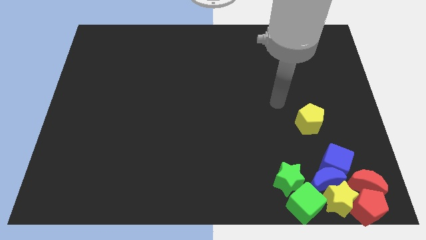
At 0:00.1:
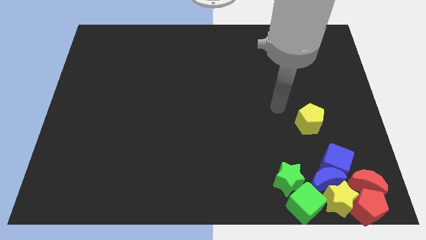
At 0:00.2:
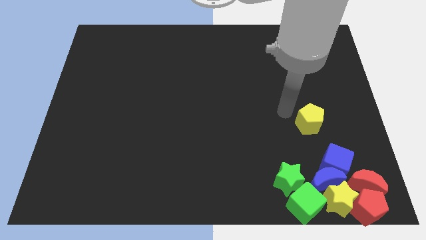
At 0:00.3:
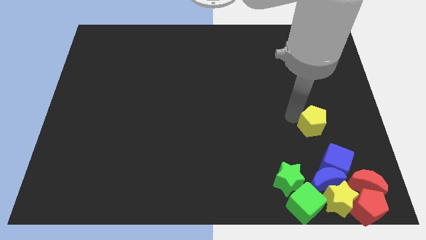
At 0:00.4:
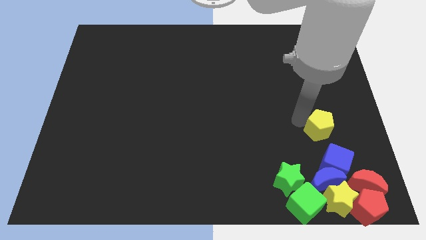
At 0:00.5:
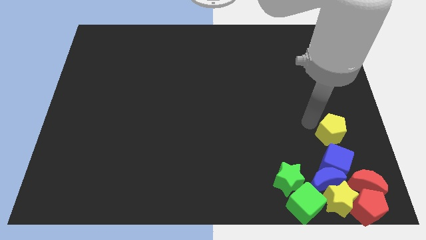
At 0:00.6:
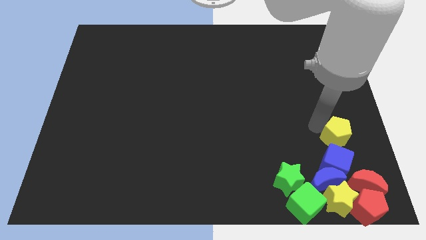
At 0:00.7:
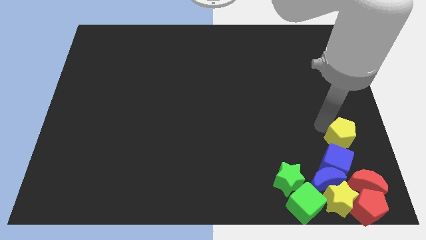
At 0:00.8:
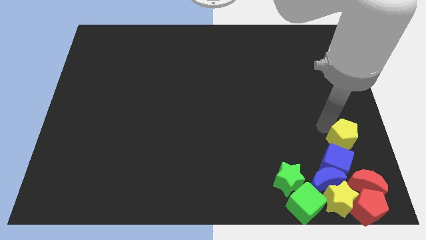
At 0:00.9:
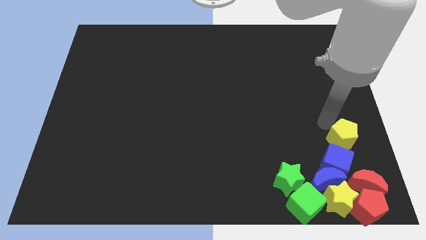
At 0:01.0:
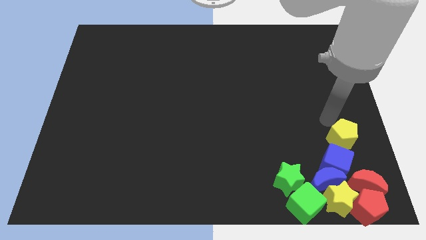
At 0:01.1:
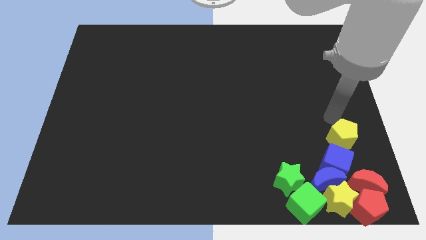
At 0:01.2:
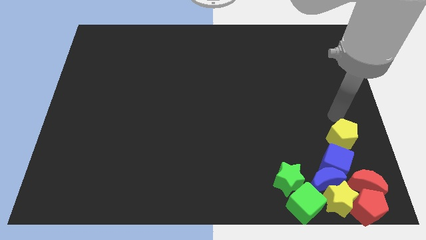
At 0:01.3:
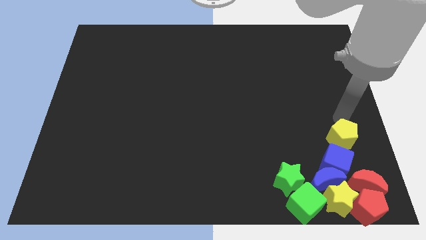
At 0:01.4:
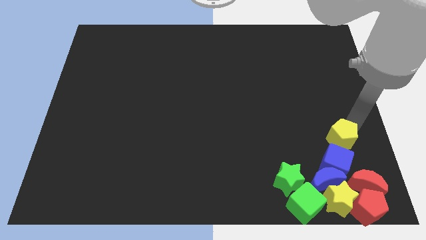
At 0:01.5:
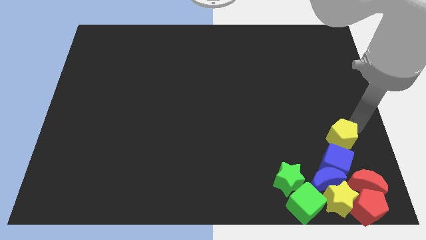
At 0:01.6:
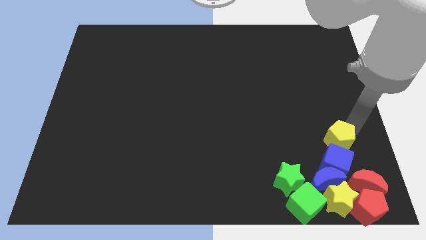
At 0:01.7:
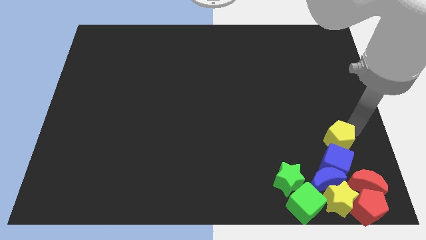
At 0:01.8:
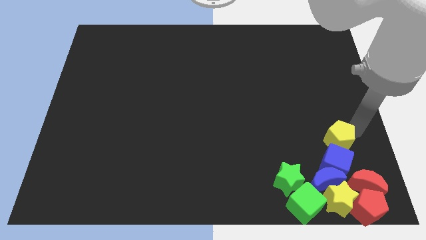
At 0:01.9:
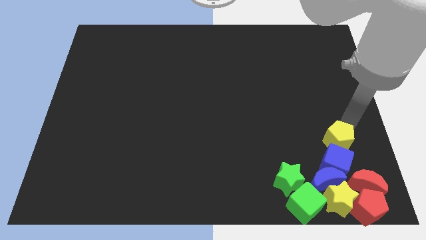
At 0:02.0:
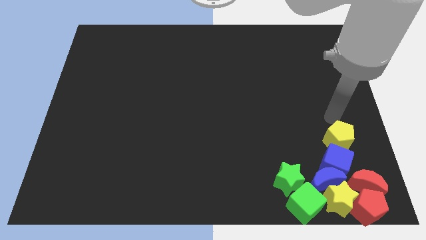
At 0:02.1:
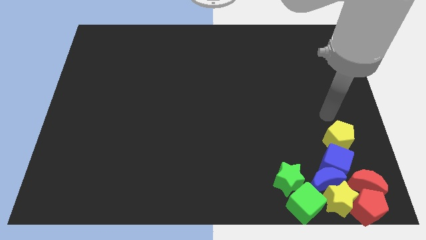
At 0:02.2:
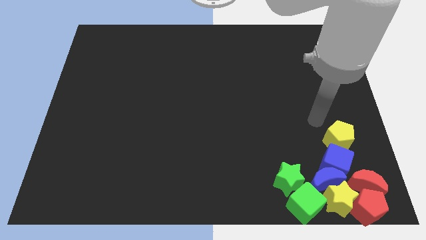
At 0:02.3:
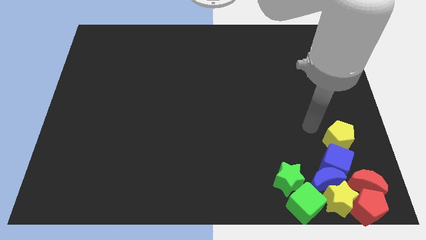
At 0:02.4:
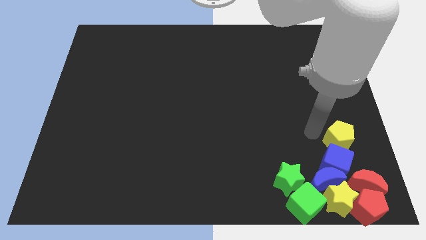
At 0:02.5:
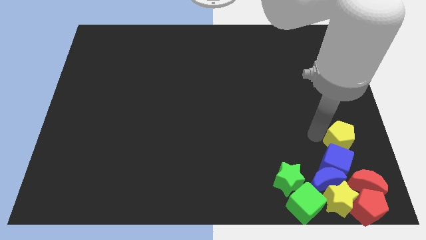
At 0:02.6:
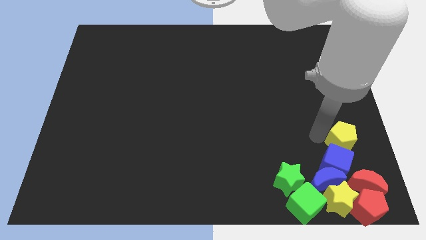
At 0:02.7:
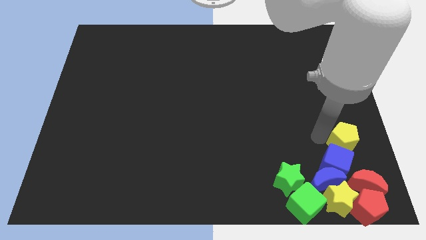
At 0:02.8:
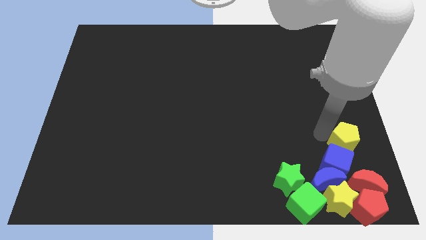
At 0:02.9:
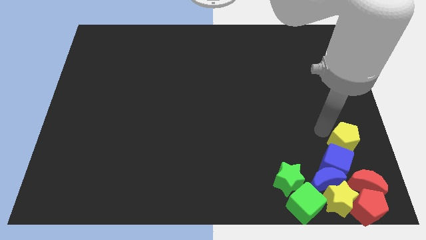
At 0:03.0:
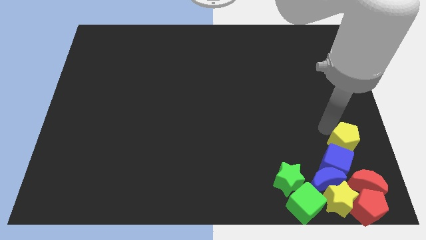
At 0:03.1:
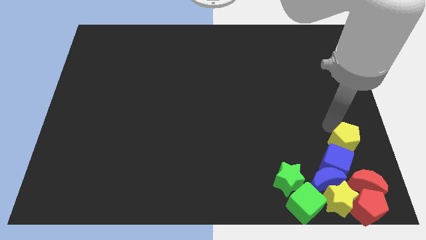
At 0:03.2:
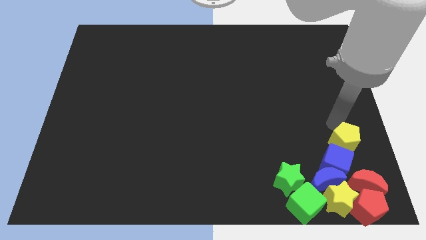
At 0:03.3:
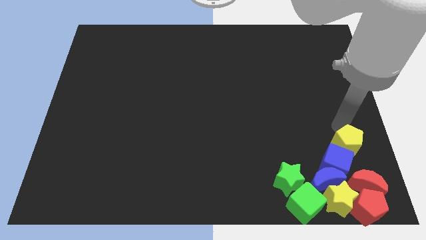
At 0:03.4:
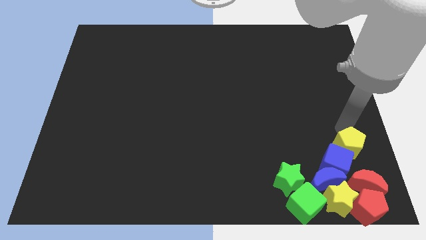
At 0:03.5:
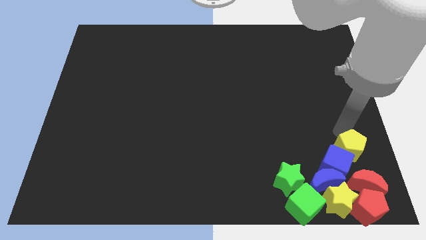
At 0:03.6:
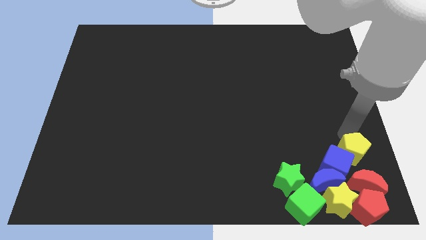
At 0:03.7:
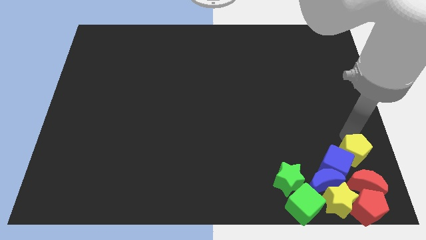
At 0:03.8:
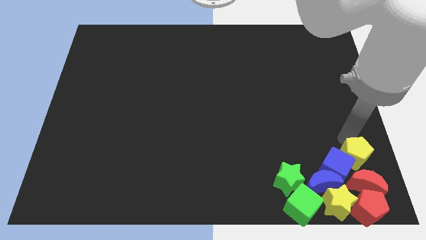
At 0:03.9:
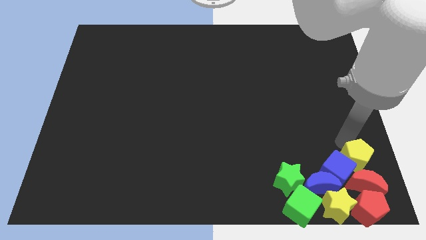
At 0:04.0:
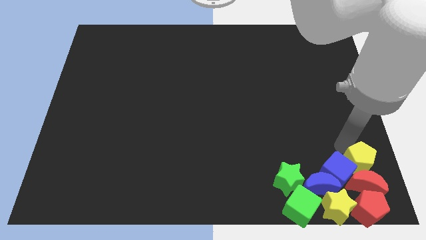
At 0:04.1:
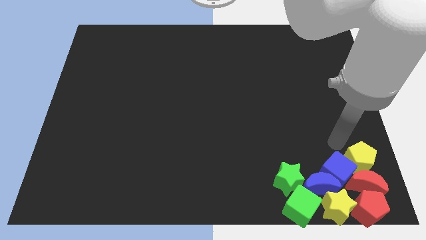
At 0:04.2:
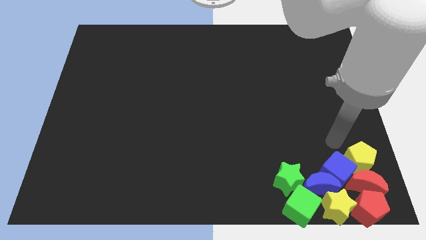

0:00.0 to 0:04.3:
place the yellow pentagon at the top of red moon

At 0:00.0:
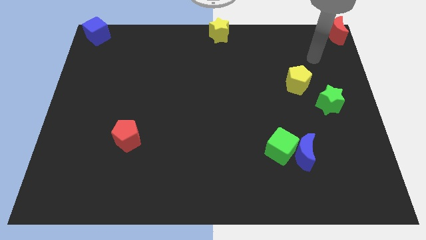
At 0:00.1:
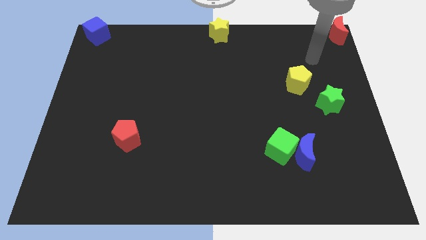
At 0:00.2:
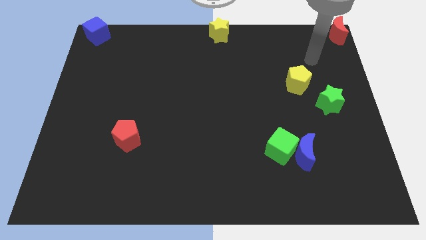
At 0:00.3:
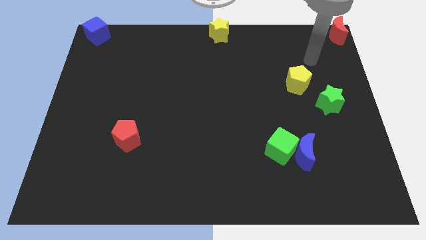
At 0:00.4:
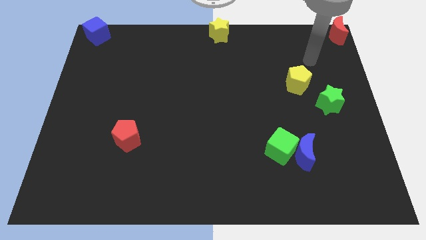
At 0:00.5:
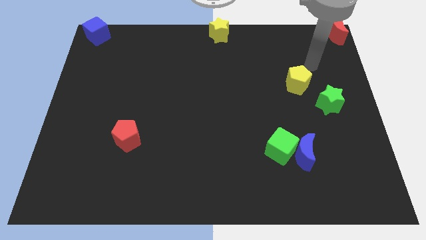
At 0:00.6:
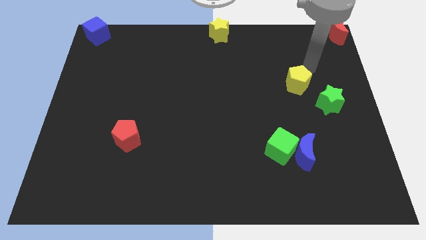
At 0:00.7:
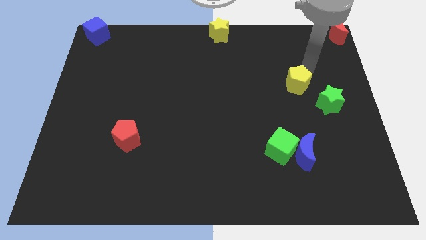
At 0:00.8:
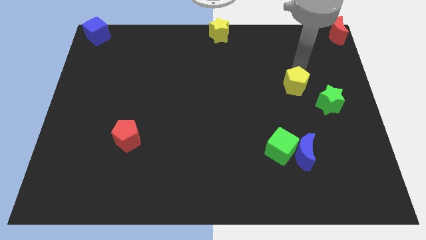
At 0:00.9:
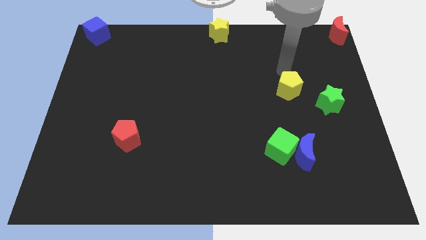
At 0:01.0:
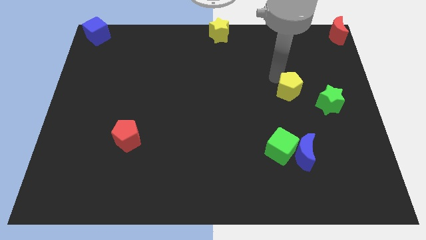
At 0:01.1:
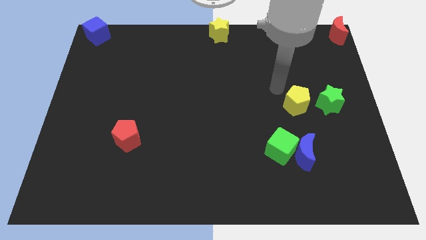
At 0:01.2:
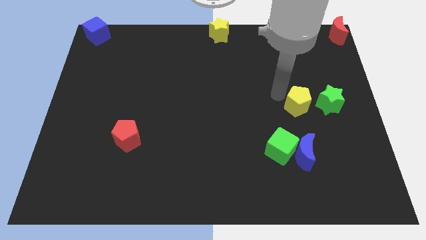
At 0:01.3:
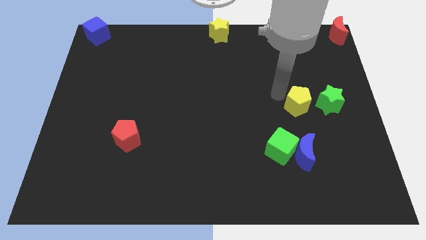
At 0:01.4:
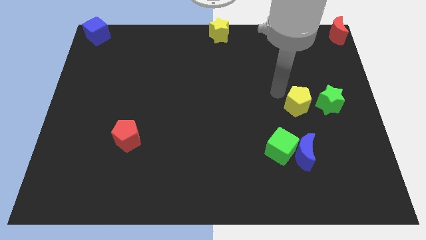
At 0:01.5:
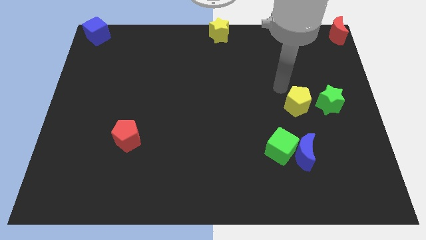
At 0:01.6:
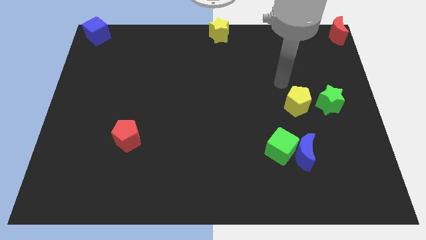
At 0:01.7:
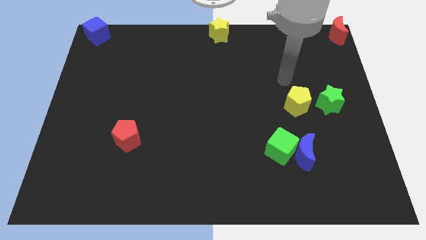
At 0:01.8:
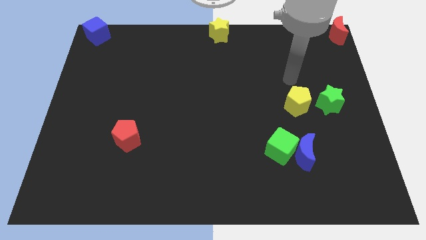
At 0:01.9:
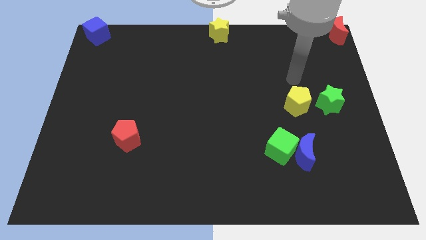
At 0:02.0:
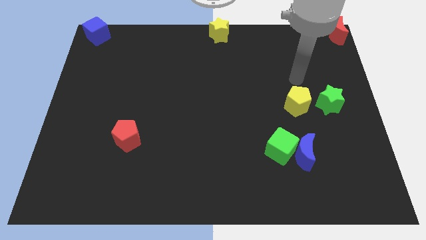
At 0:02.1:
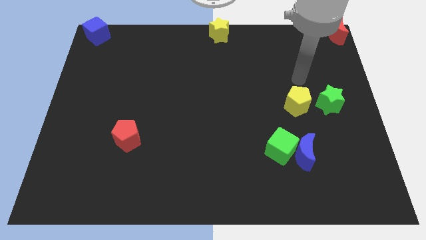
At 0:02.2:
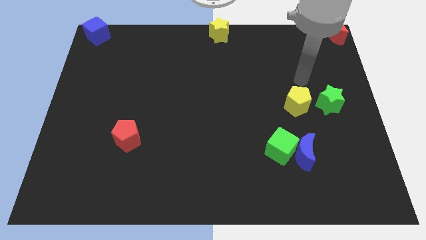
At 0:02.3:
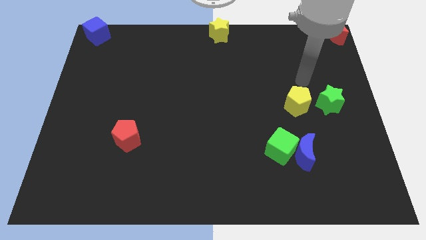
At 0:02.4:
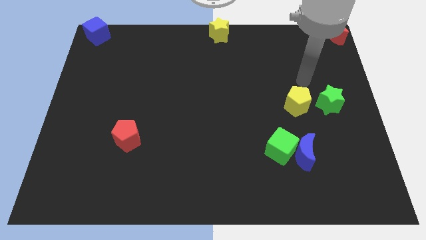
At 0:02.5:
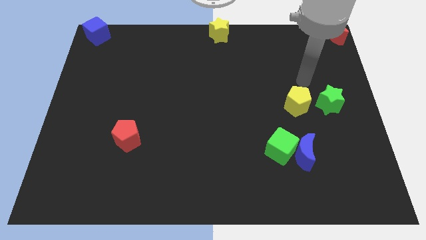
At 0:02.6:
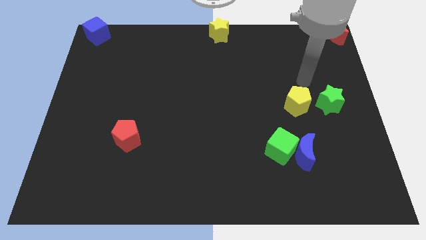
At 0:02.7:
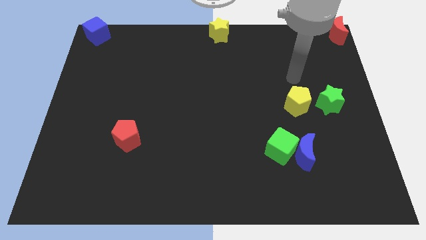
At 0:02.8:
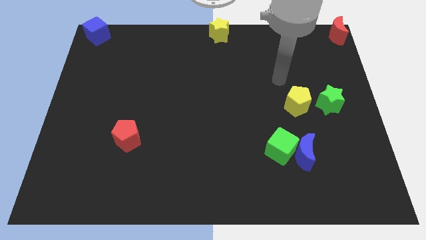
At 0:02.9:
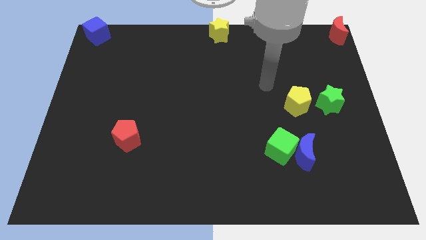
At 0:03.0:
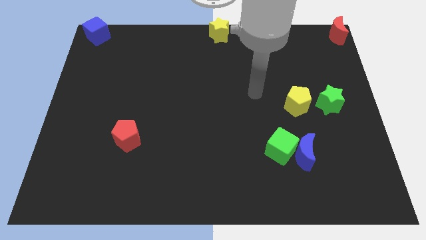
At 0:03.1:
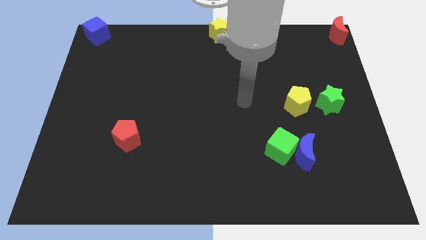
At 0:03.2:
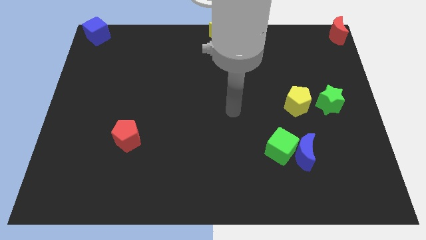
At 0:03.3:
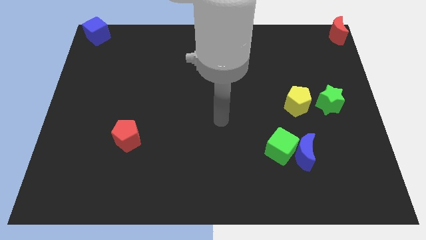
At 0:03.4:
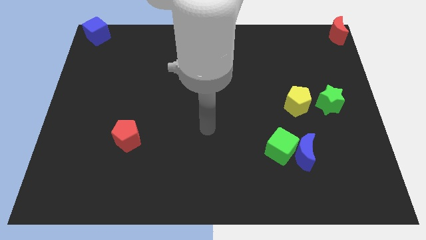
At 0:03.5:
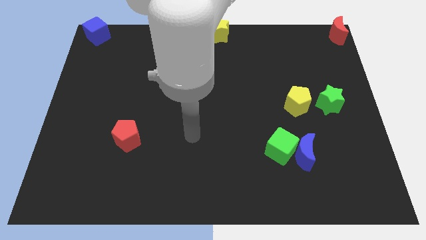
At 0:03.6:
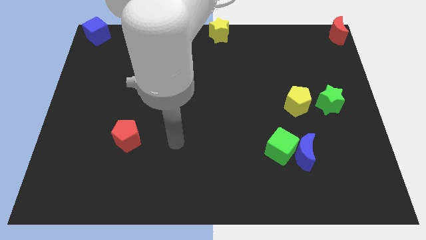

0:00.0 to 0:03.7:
push the yellow pentagon towards the left side of the green star

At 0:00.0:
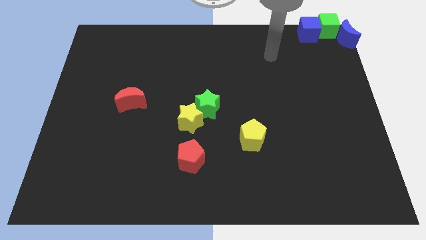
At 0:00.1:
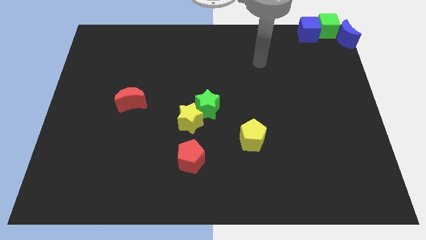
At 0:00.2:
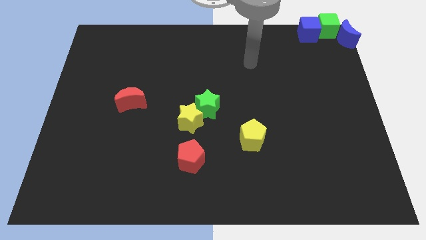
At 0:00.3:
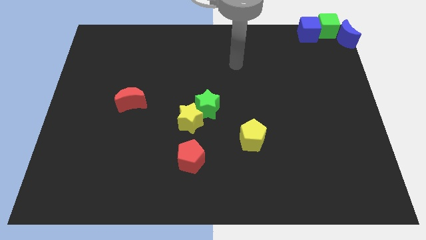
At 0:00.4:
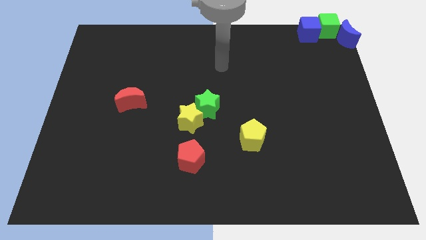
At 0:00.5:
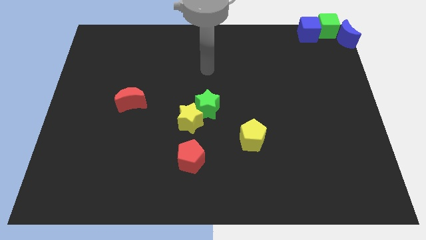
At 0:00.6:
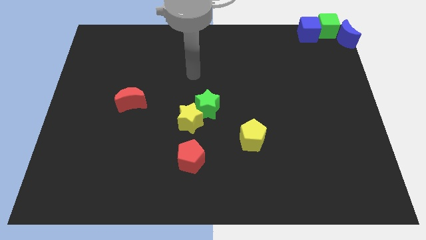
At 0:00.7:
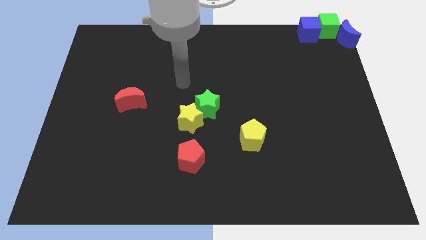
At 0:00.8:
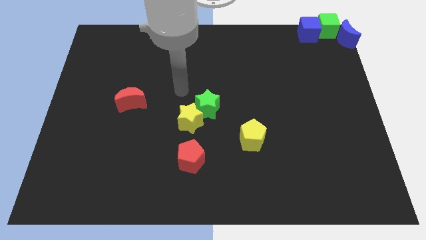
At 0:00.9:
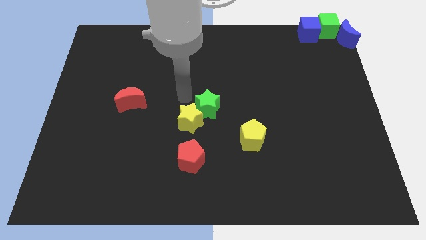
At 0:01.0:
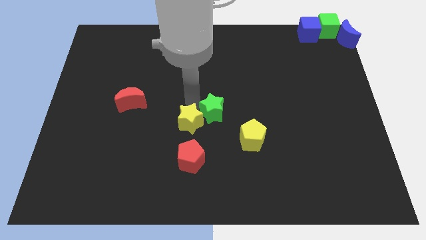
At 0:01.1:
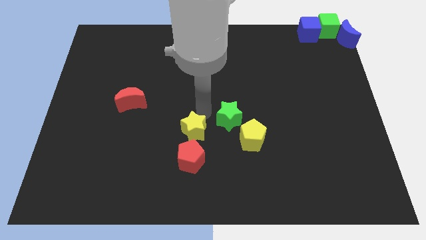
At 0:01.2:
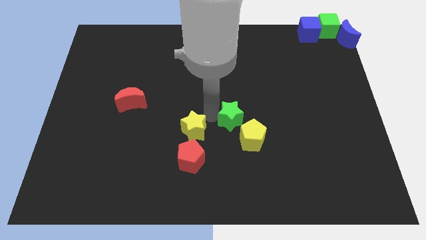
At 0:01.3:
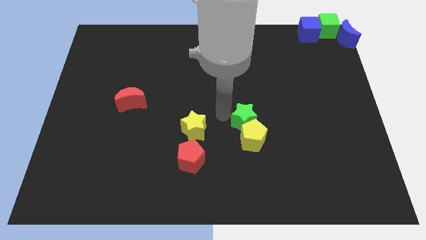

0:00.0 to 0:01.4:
separate green star from yellow star
